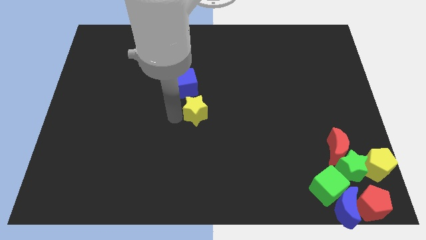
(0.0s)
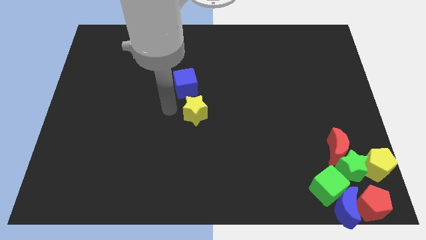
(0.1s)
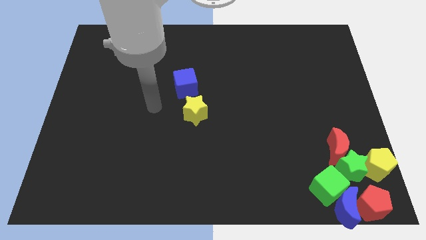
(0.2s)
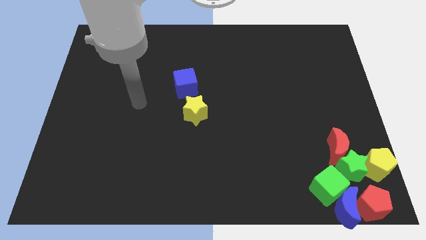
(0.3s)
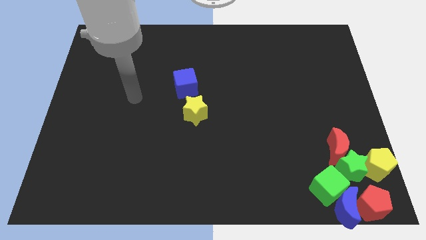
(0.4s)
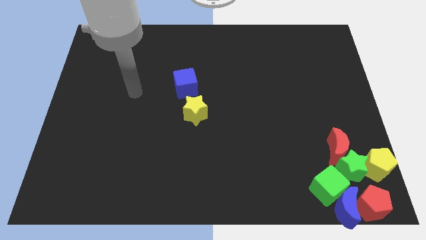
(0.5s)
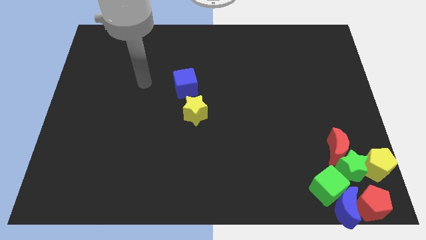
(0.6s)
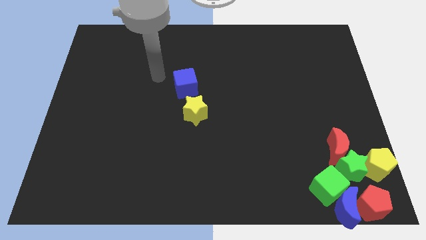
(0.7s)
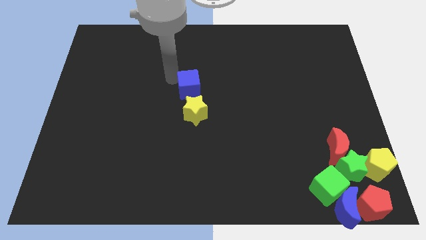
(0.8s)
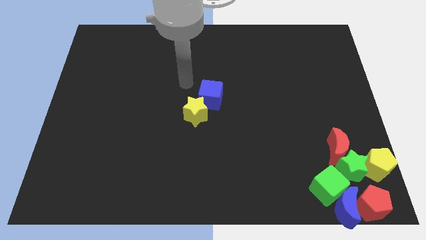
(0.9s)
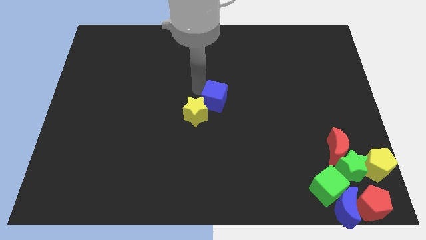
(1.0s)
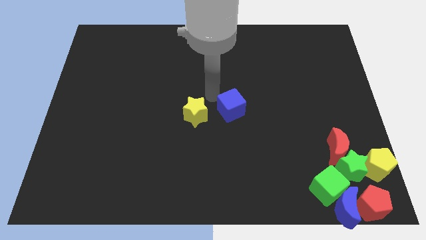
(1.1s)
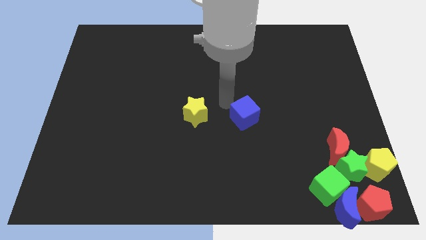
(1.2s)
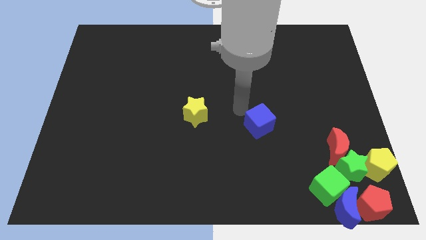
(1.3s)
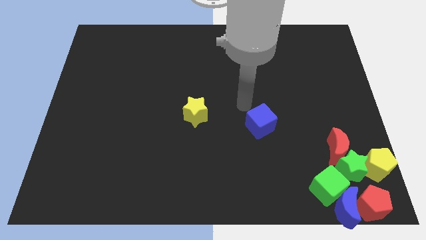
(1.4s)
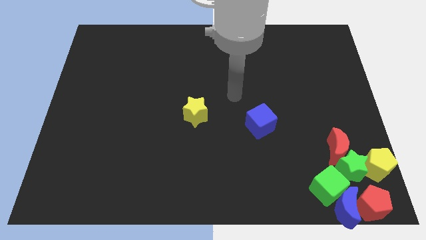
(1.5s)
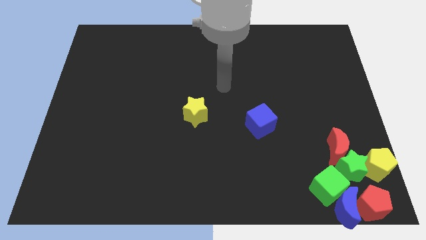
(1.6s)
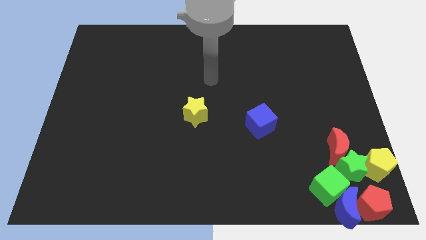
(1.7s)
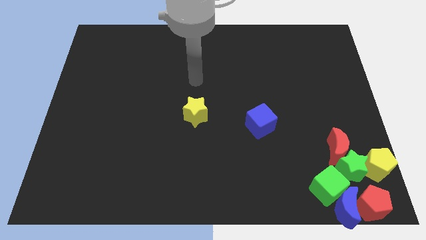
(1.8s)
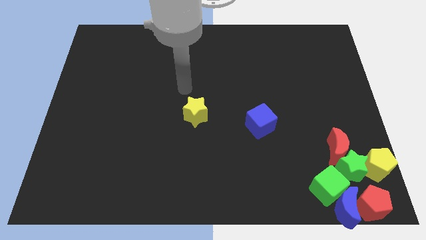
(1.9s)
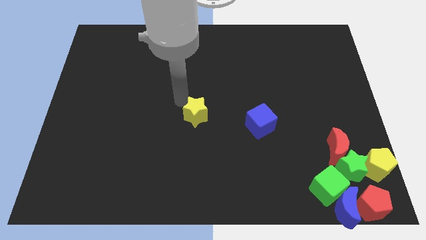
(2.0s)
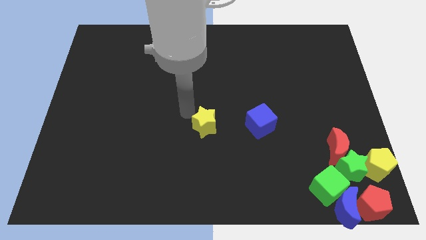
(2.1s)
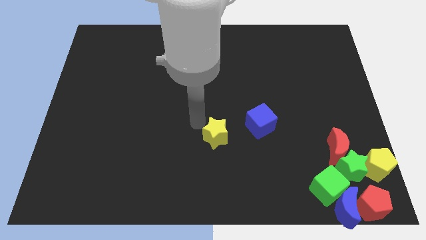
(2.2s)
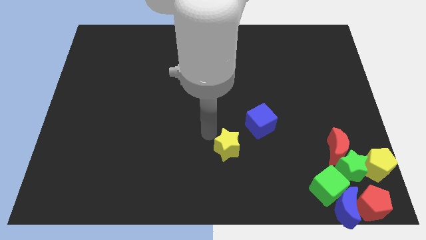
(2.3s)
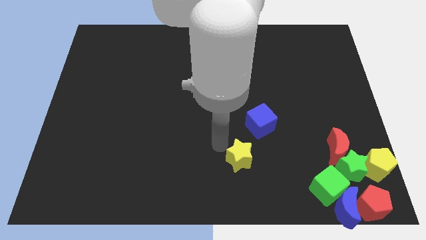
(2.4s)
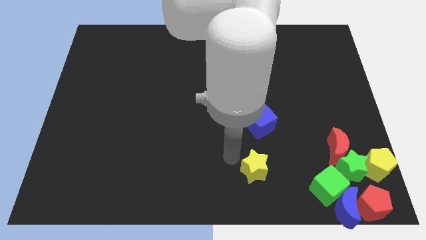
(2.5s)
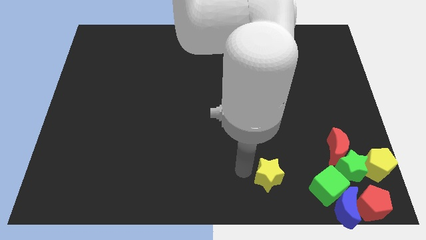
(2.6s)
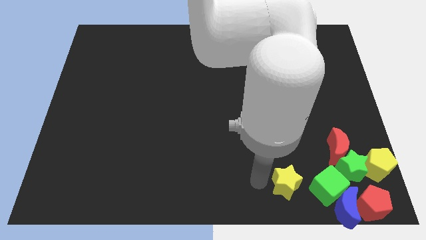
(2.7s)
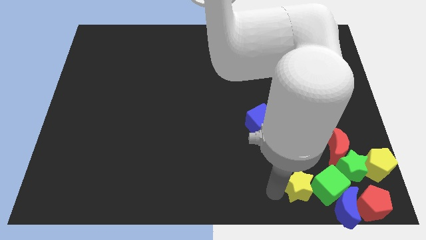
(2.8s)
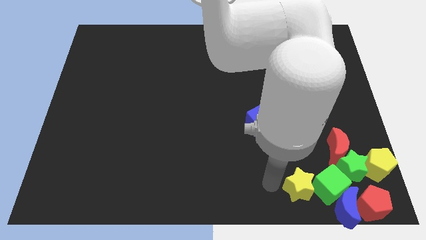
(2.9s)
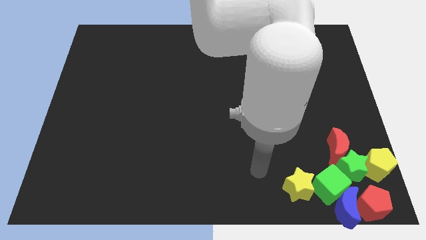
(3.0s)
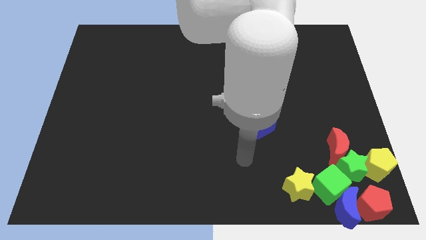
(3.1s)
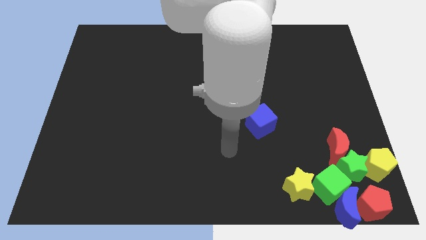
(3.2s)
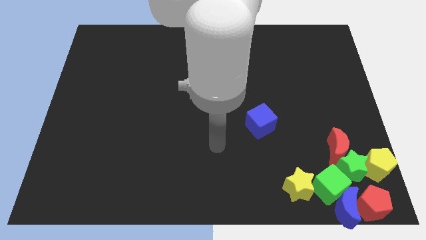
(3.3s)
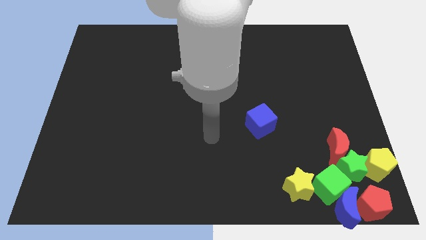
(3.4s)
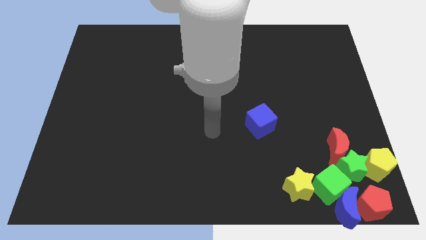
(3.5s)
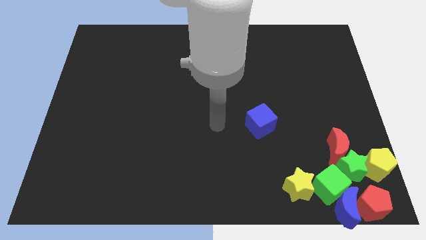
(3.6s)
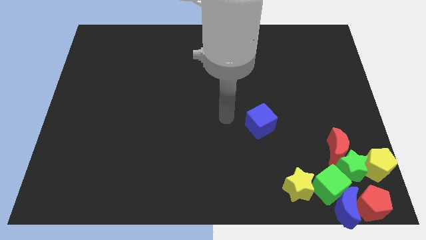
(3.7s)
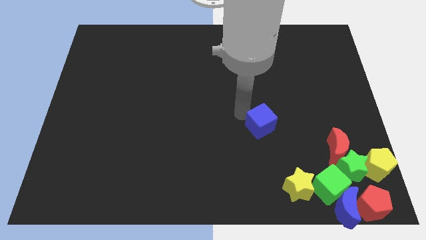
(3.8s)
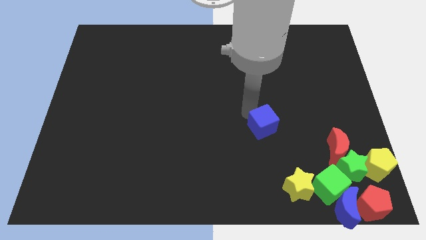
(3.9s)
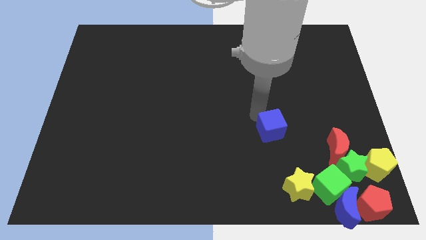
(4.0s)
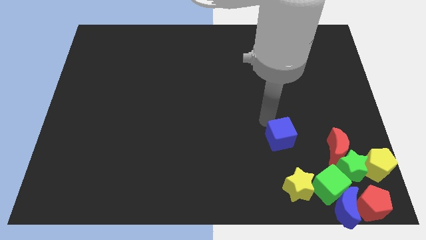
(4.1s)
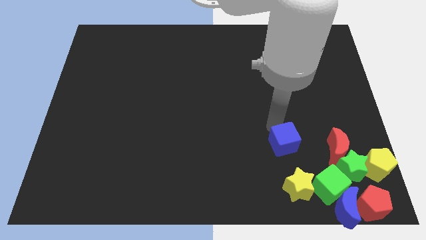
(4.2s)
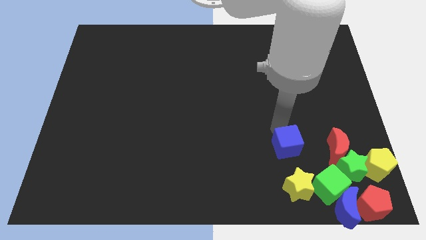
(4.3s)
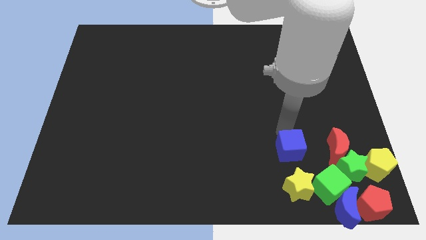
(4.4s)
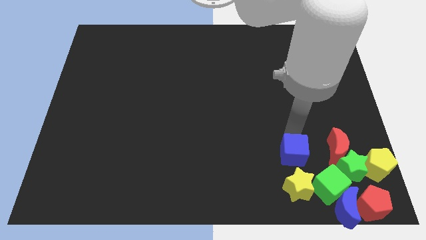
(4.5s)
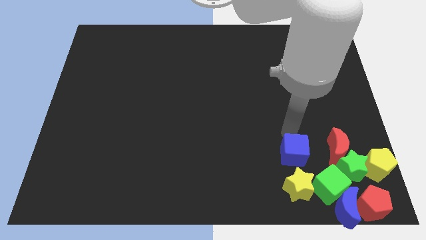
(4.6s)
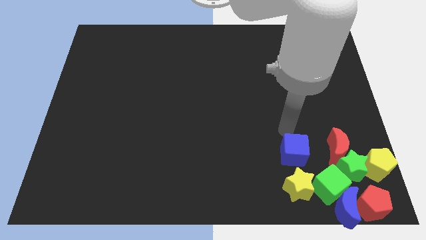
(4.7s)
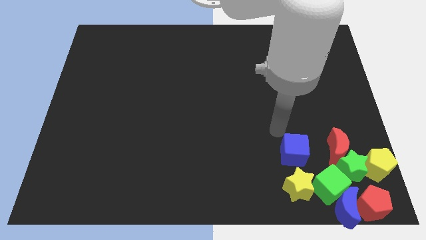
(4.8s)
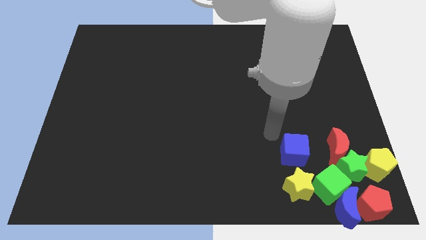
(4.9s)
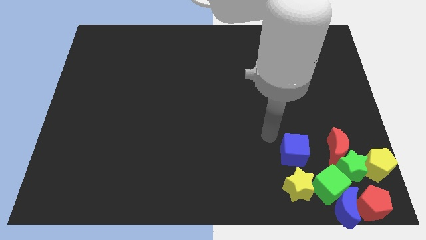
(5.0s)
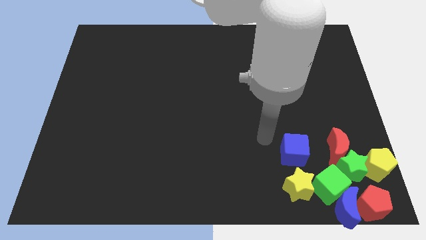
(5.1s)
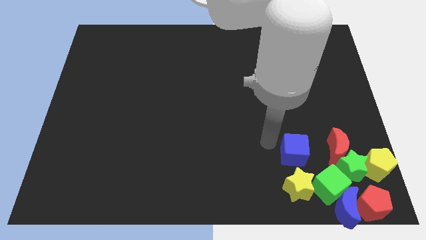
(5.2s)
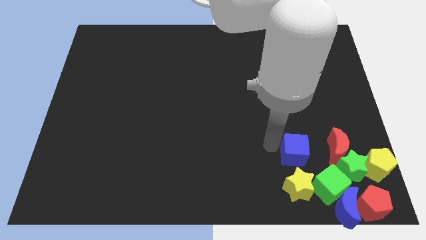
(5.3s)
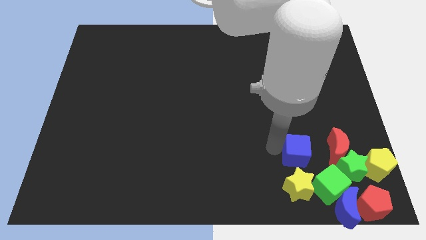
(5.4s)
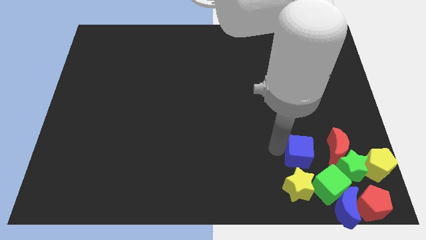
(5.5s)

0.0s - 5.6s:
push the yellow star and the blue cube into the group of blocks

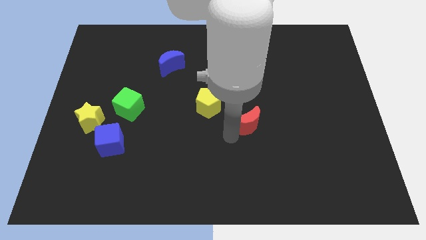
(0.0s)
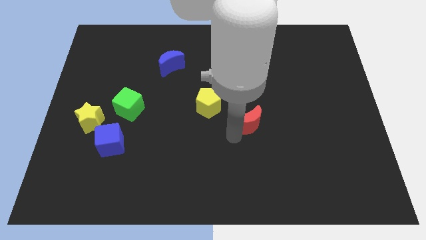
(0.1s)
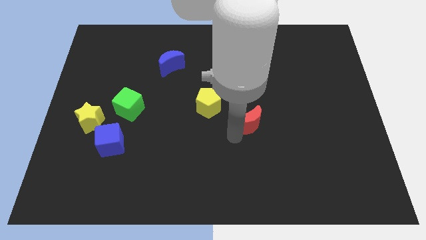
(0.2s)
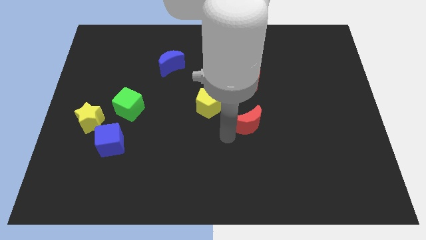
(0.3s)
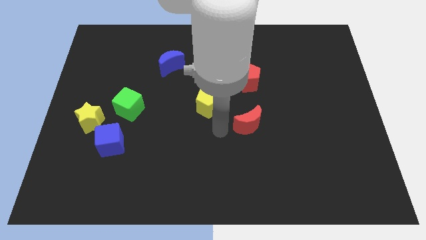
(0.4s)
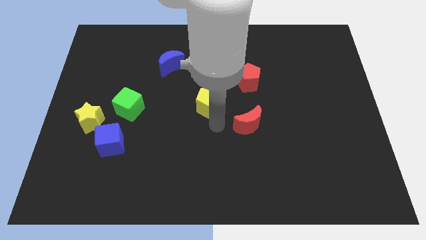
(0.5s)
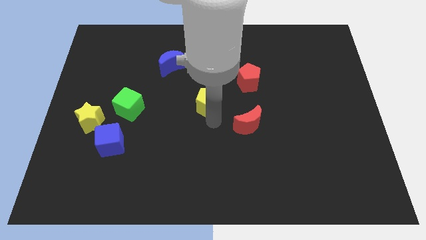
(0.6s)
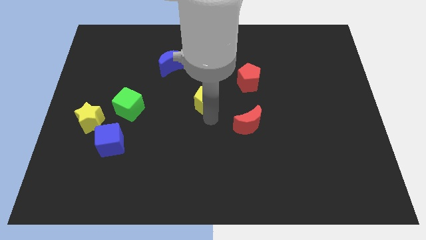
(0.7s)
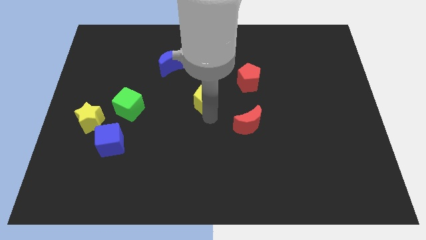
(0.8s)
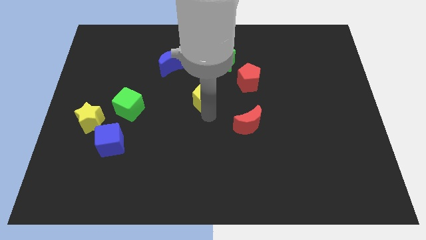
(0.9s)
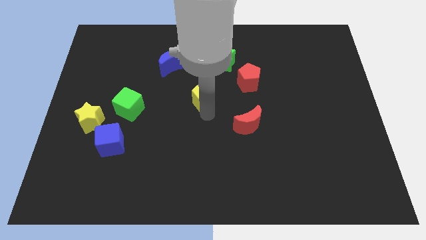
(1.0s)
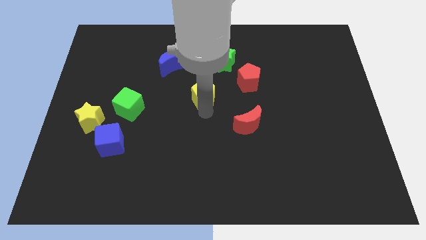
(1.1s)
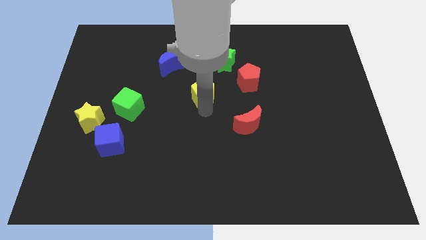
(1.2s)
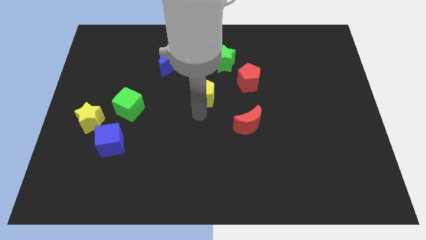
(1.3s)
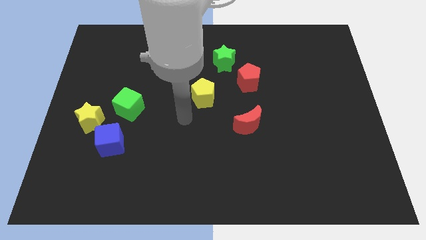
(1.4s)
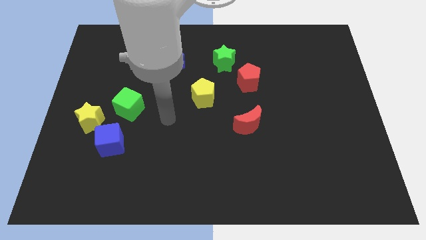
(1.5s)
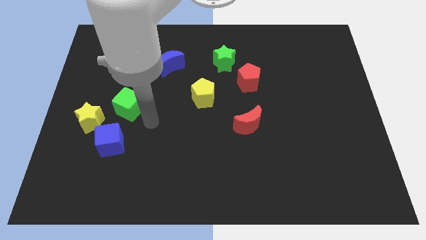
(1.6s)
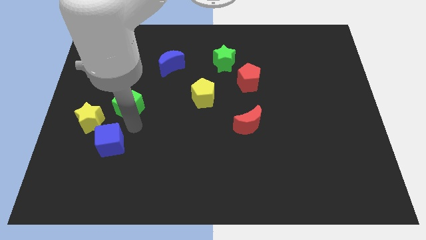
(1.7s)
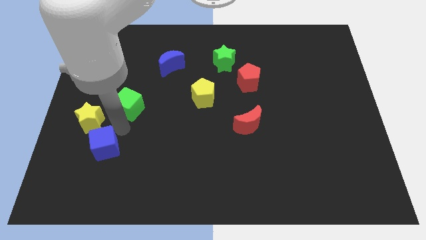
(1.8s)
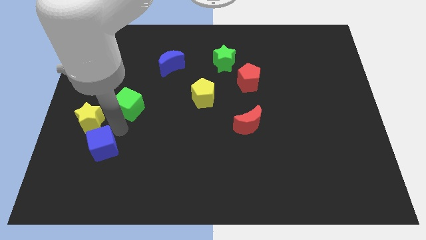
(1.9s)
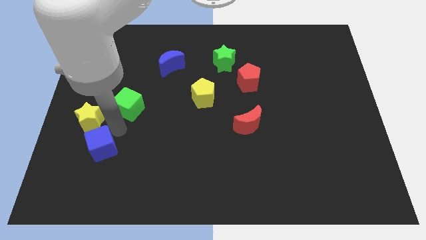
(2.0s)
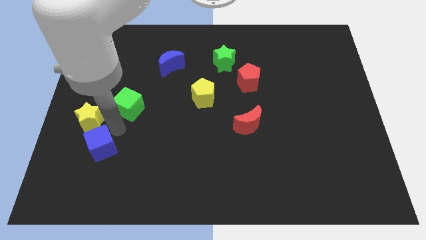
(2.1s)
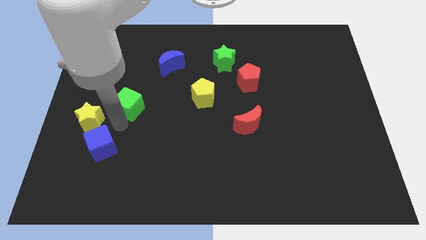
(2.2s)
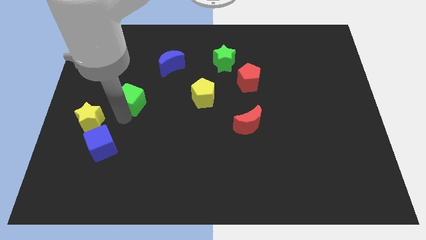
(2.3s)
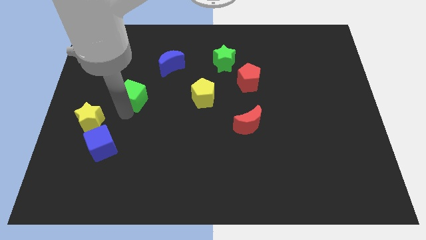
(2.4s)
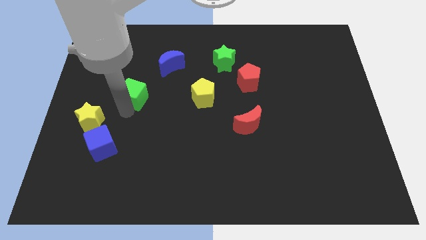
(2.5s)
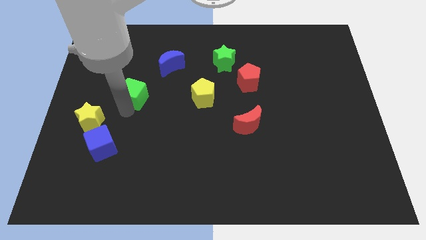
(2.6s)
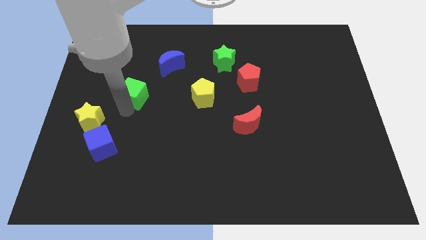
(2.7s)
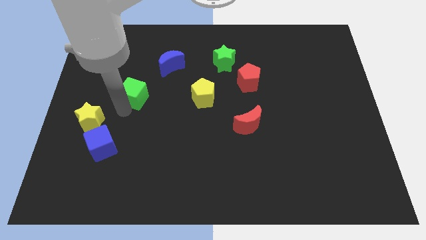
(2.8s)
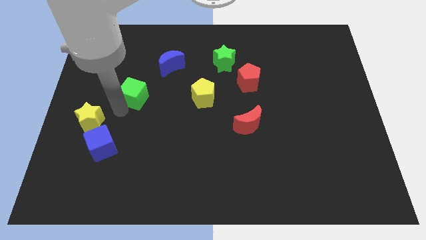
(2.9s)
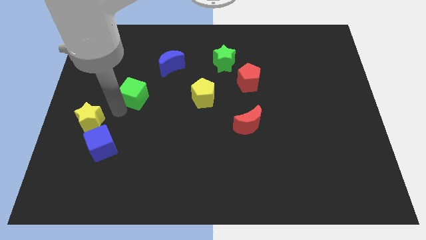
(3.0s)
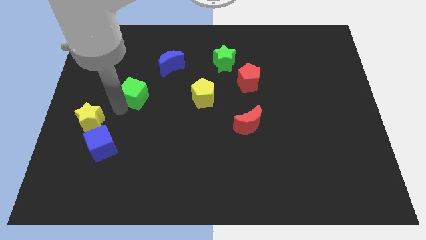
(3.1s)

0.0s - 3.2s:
point your arm left to the green cube

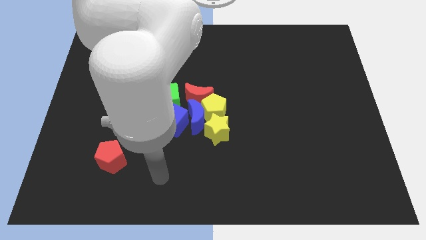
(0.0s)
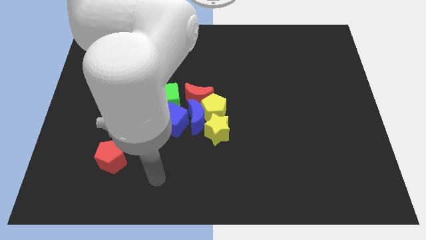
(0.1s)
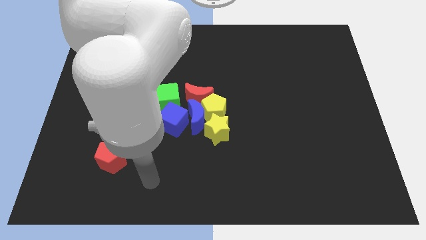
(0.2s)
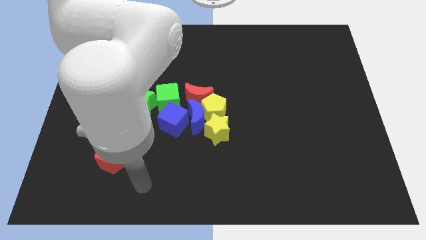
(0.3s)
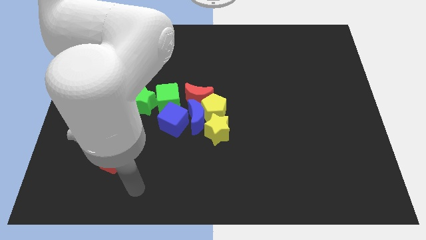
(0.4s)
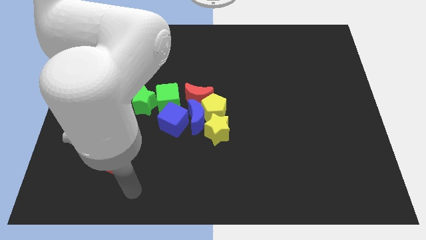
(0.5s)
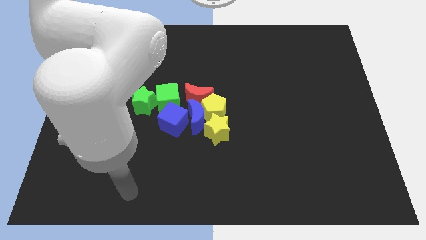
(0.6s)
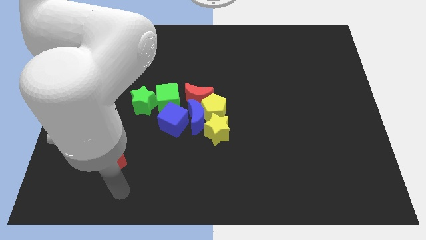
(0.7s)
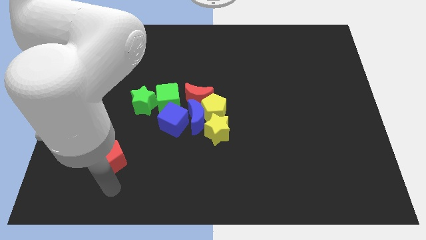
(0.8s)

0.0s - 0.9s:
move the arm to the bottom side of the red pentagon
